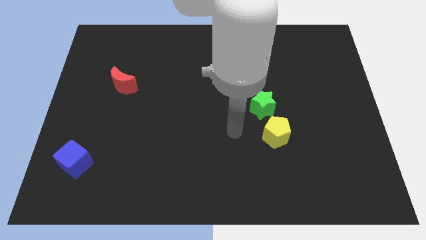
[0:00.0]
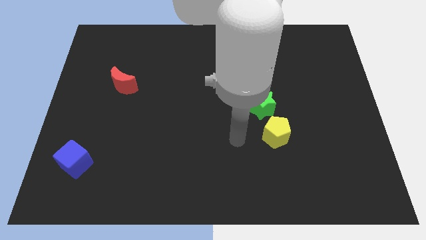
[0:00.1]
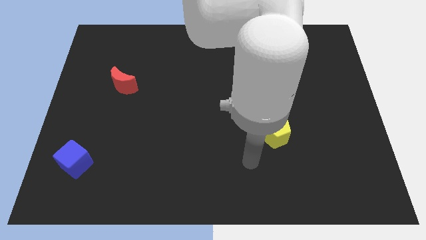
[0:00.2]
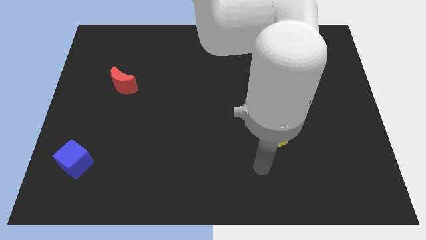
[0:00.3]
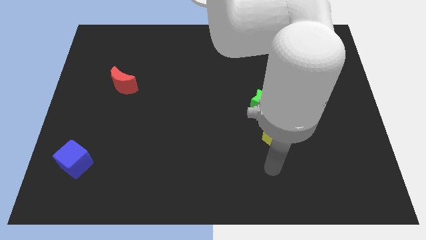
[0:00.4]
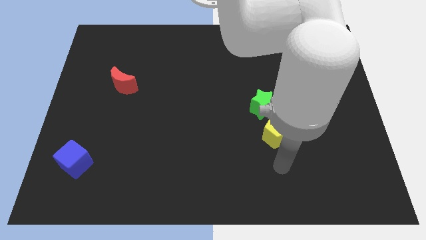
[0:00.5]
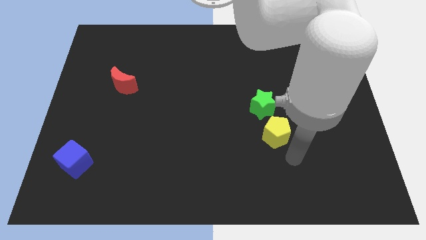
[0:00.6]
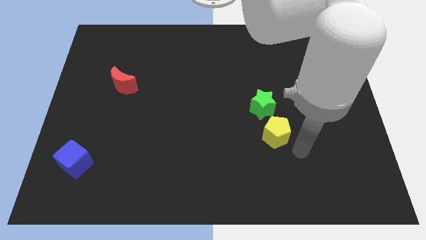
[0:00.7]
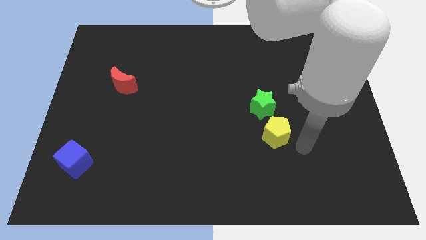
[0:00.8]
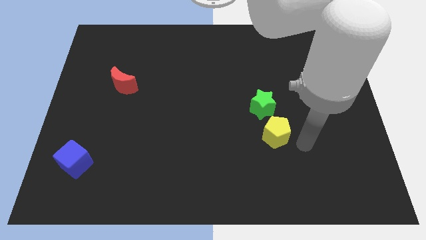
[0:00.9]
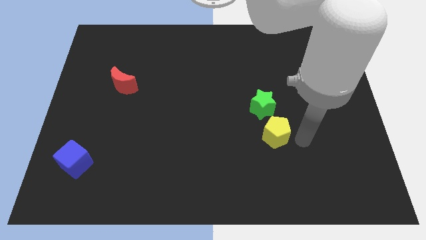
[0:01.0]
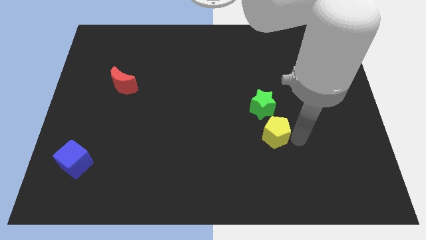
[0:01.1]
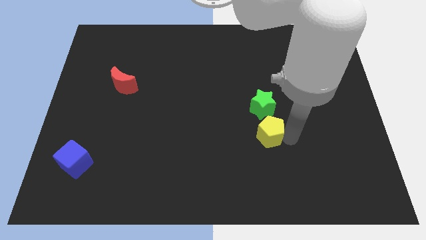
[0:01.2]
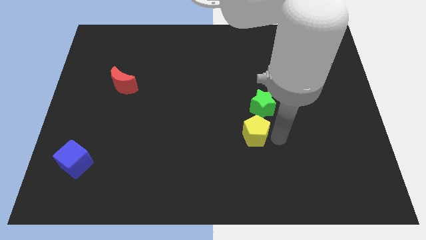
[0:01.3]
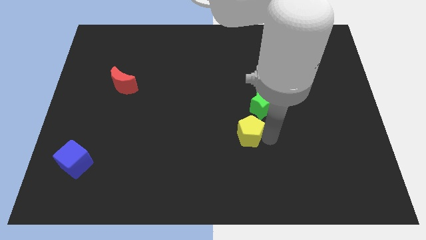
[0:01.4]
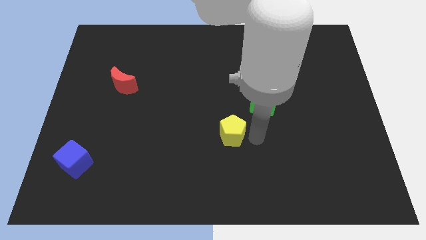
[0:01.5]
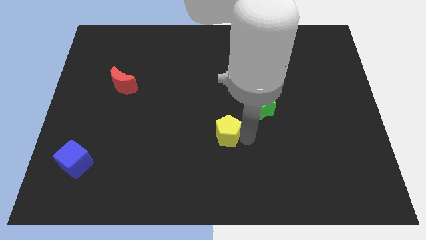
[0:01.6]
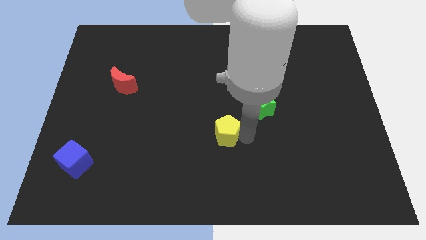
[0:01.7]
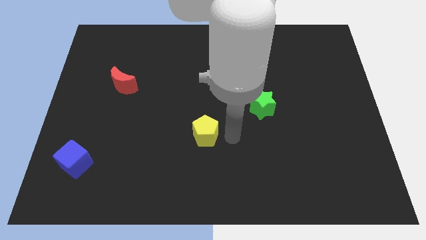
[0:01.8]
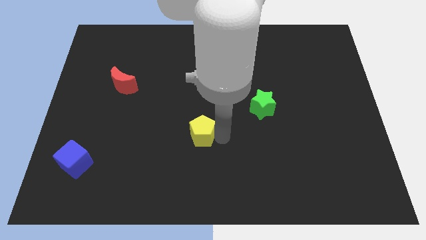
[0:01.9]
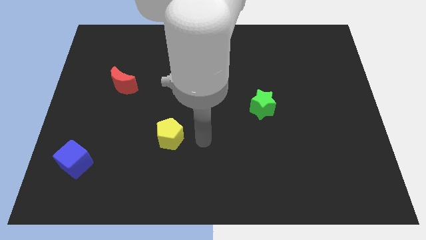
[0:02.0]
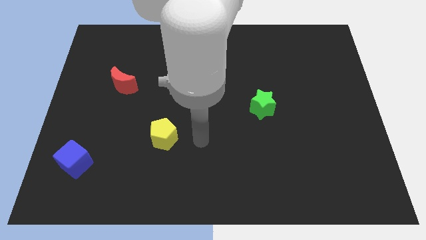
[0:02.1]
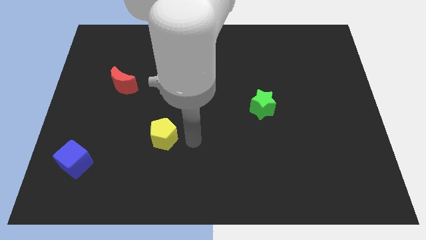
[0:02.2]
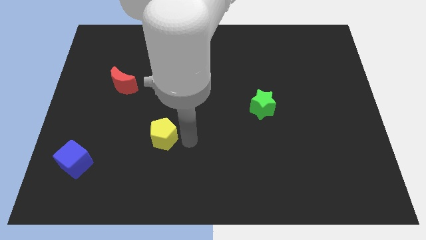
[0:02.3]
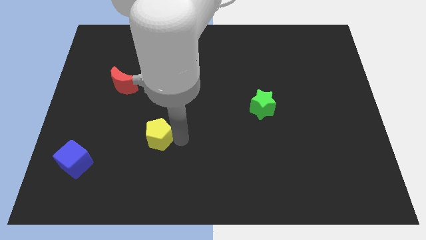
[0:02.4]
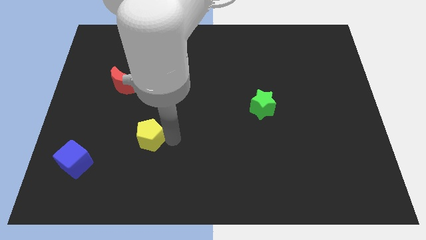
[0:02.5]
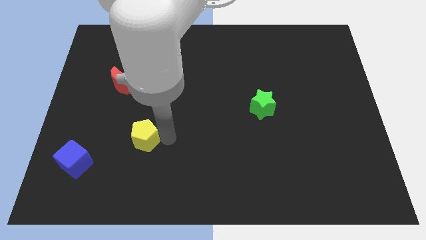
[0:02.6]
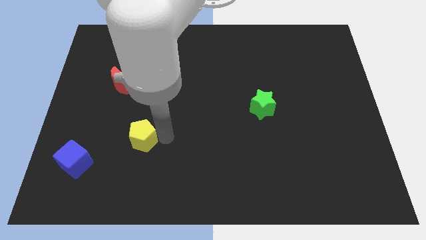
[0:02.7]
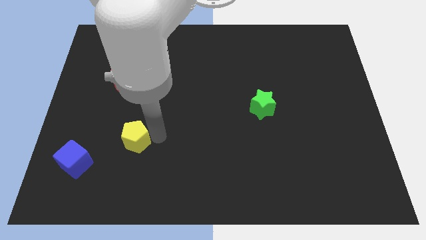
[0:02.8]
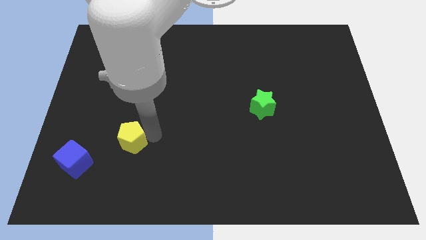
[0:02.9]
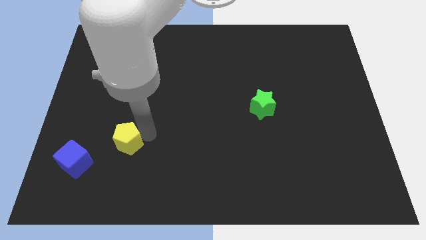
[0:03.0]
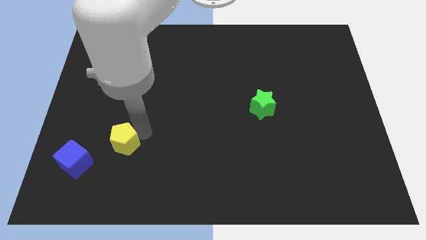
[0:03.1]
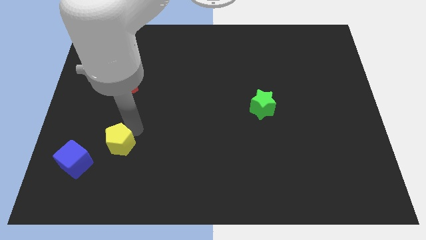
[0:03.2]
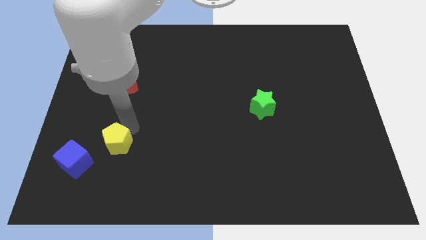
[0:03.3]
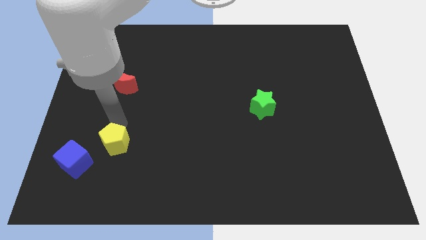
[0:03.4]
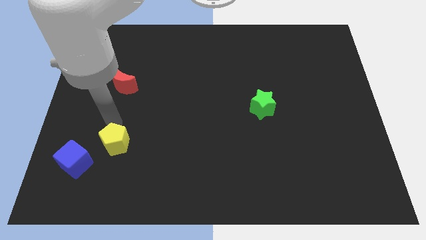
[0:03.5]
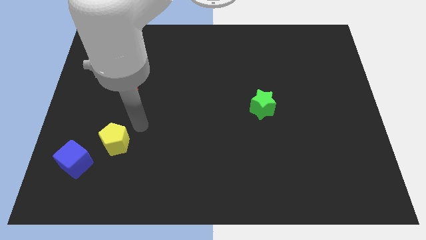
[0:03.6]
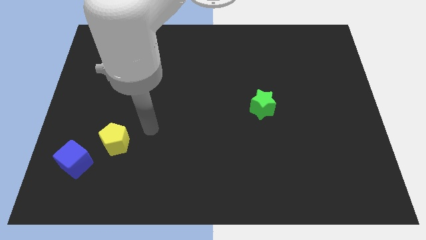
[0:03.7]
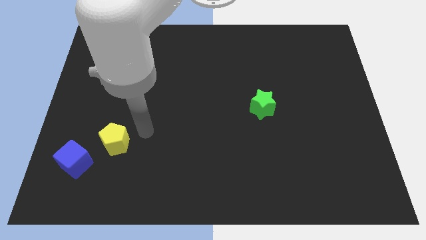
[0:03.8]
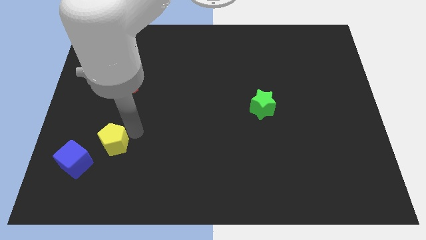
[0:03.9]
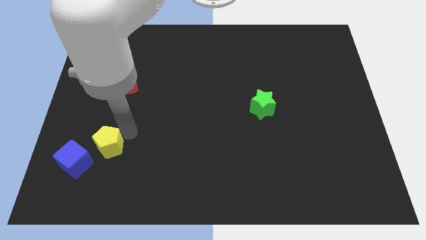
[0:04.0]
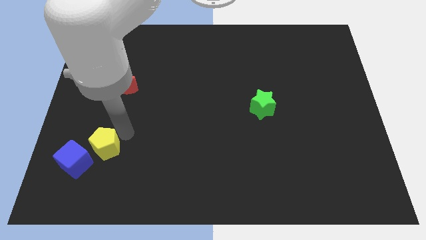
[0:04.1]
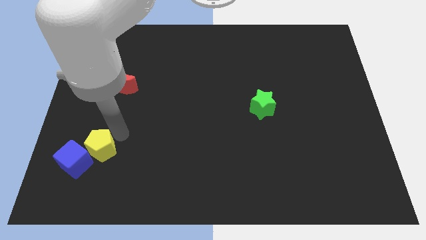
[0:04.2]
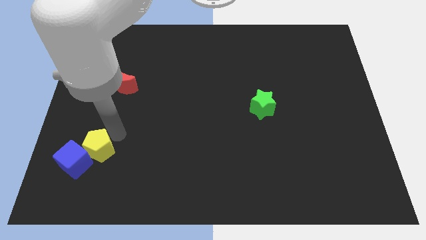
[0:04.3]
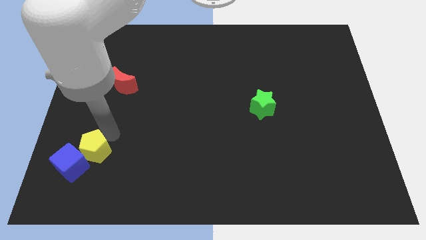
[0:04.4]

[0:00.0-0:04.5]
push the yellow pentagon to the blue cube

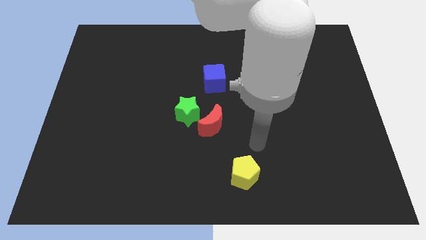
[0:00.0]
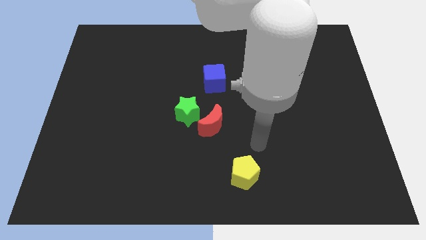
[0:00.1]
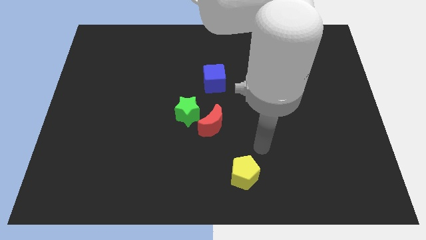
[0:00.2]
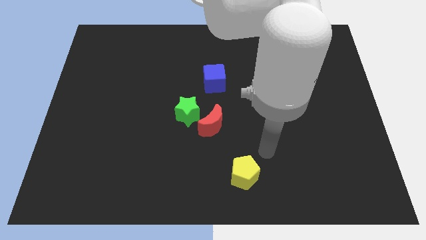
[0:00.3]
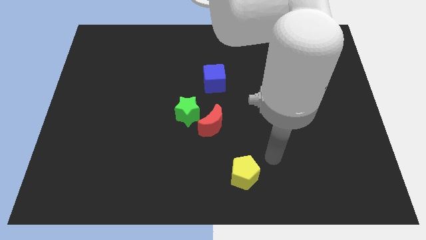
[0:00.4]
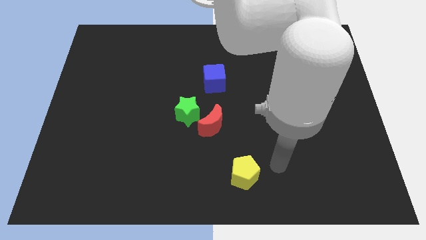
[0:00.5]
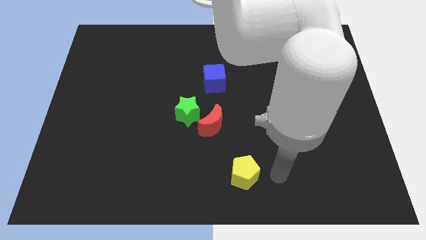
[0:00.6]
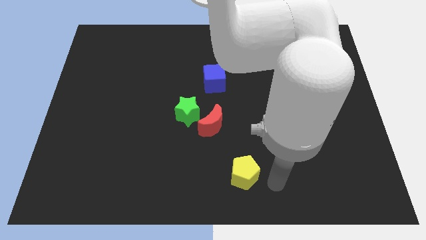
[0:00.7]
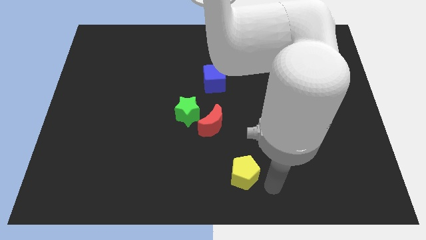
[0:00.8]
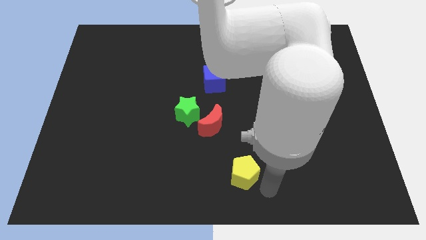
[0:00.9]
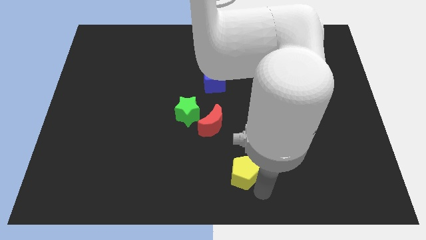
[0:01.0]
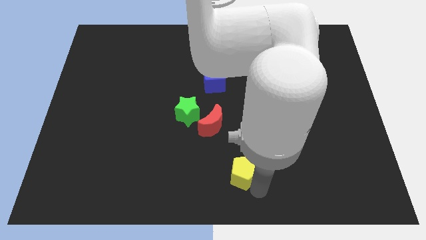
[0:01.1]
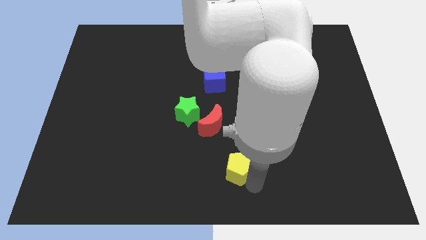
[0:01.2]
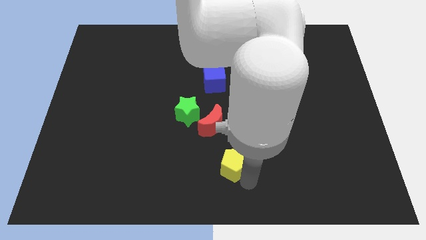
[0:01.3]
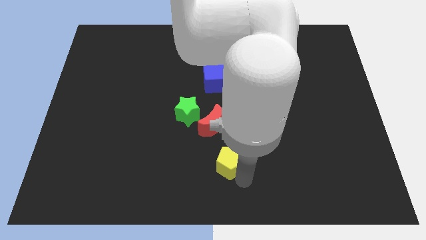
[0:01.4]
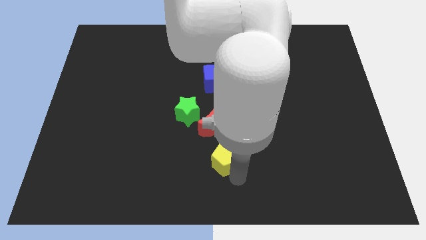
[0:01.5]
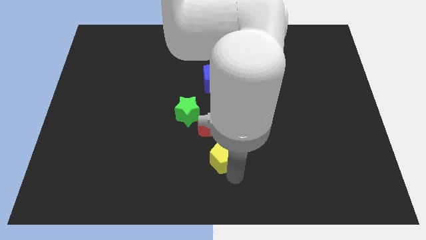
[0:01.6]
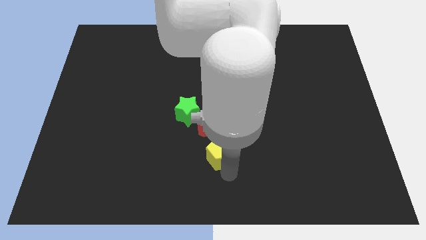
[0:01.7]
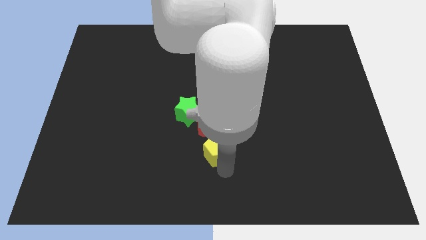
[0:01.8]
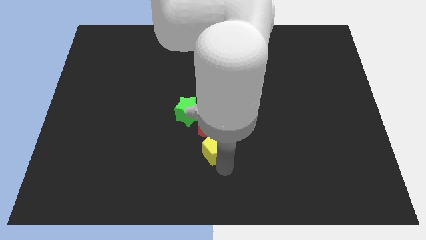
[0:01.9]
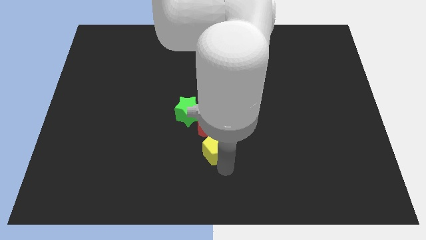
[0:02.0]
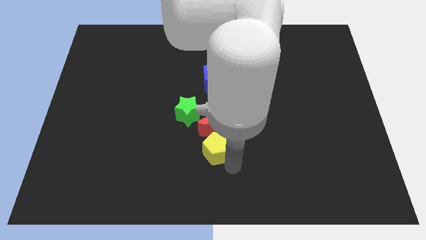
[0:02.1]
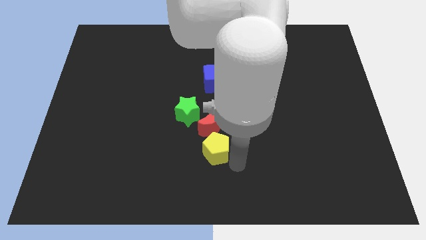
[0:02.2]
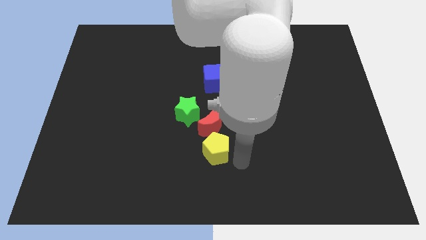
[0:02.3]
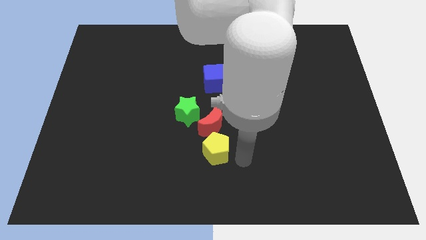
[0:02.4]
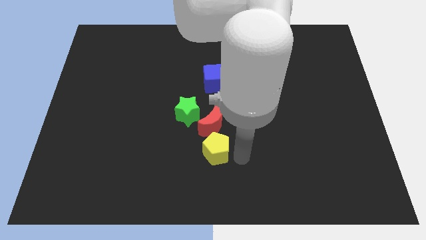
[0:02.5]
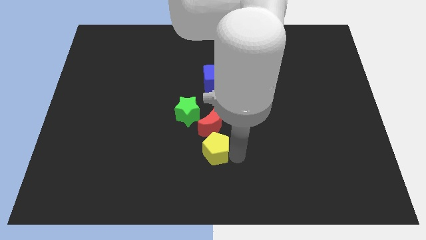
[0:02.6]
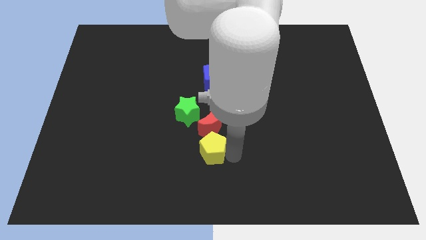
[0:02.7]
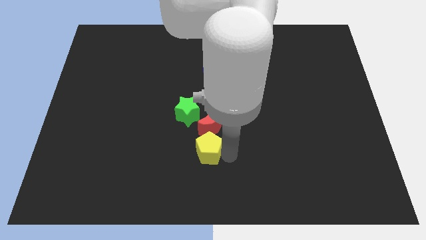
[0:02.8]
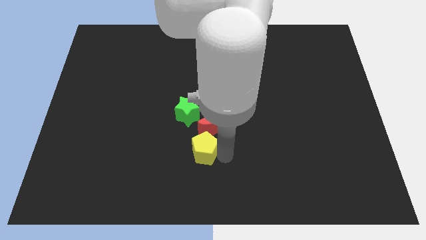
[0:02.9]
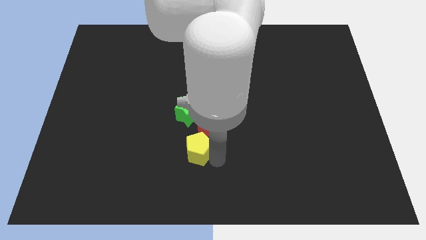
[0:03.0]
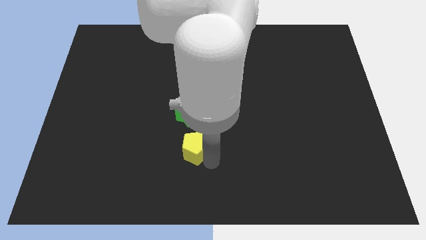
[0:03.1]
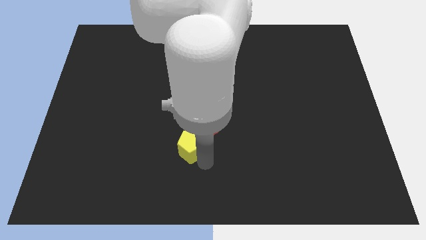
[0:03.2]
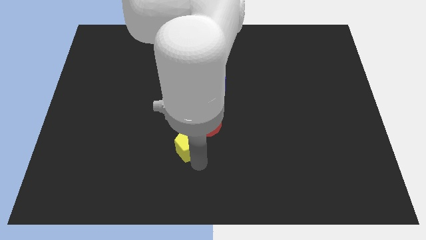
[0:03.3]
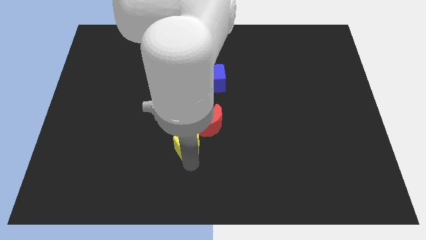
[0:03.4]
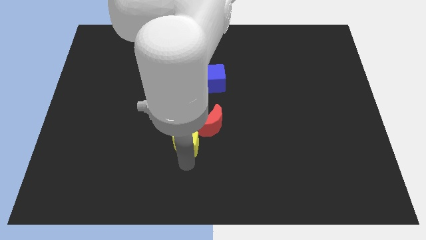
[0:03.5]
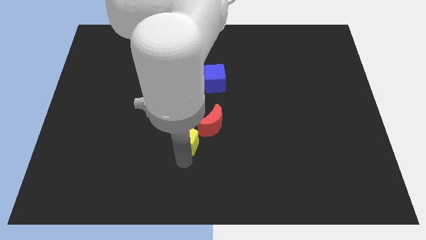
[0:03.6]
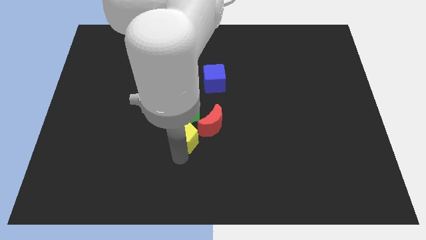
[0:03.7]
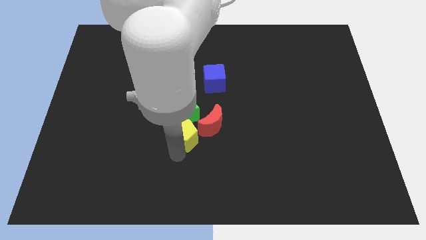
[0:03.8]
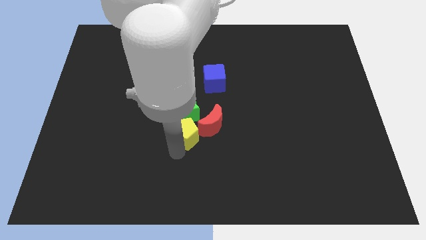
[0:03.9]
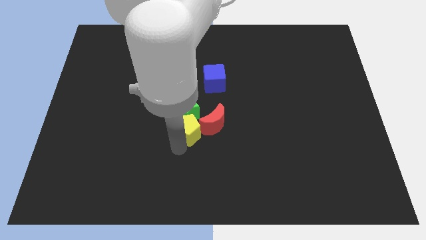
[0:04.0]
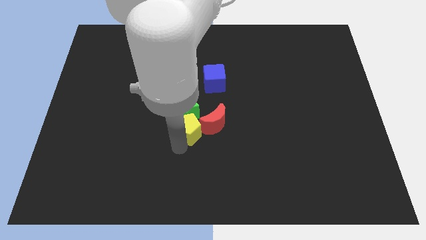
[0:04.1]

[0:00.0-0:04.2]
put the yellow block next to the green star
